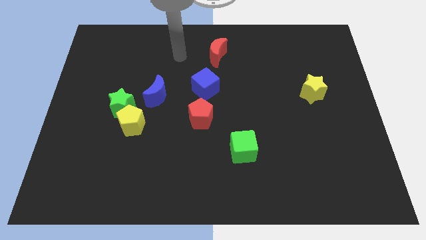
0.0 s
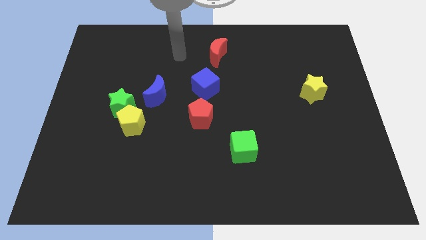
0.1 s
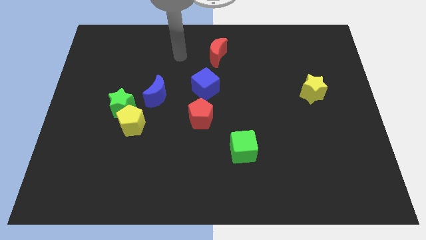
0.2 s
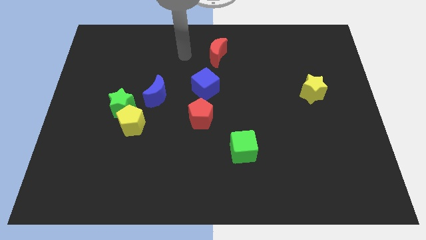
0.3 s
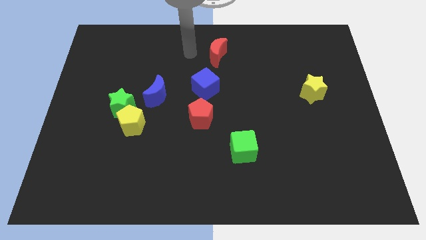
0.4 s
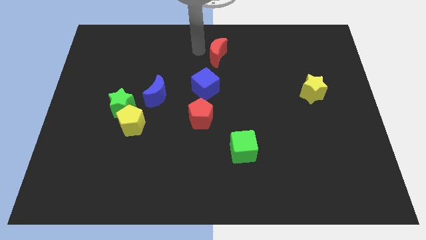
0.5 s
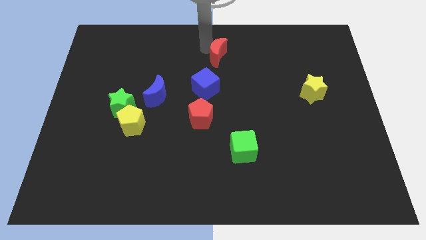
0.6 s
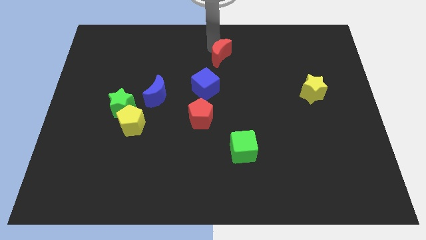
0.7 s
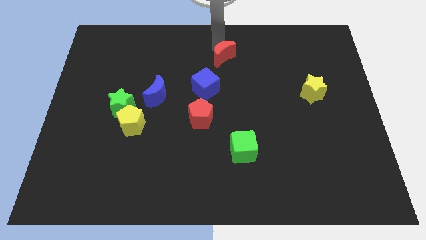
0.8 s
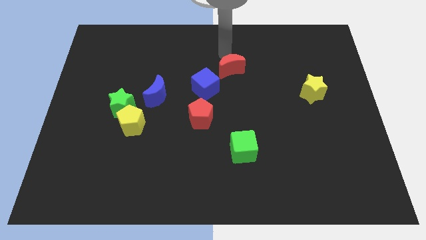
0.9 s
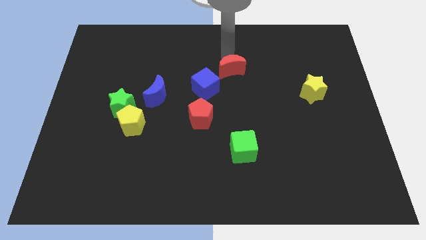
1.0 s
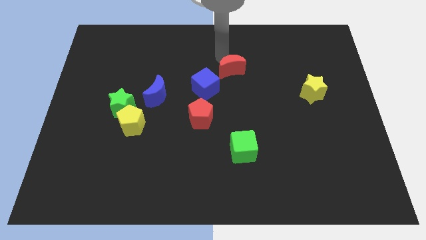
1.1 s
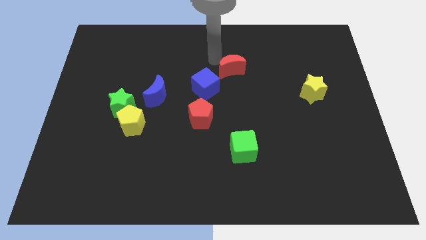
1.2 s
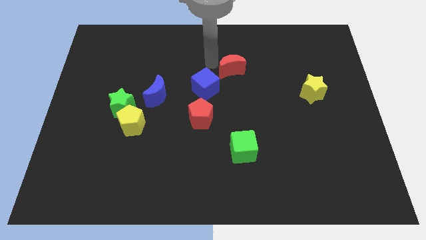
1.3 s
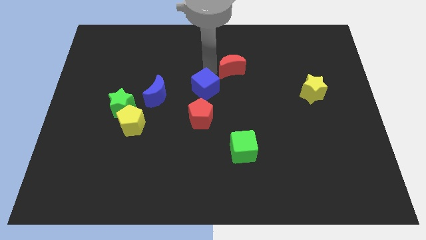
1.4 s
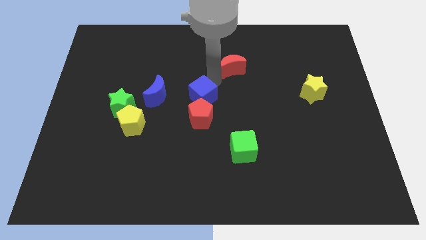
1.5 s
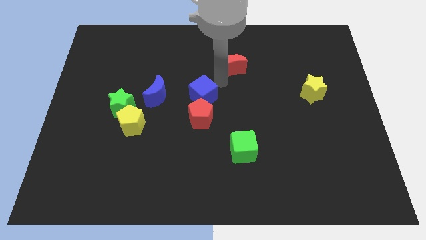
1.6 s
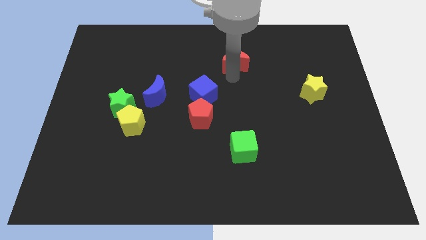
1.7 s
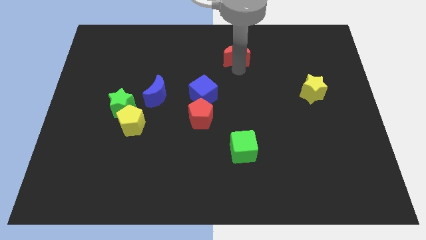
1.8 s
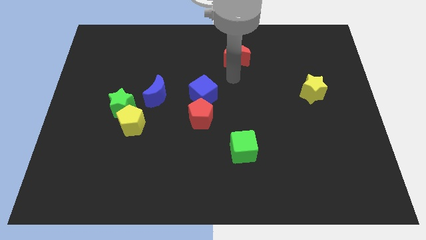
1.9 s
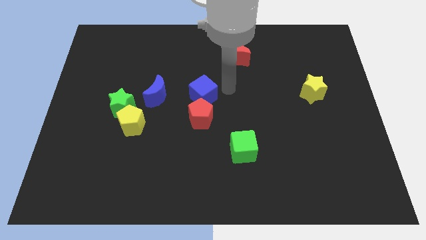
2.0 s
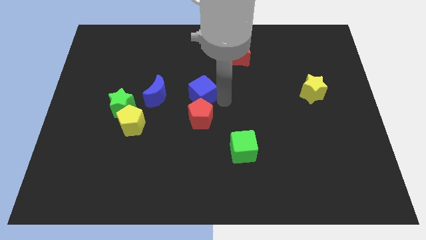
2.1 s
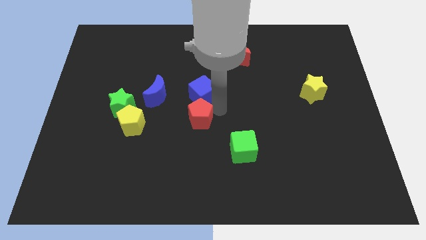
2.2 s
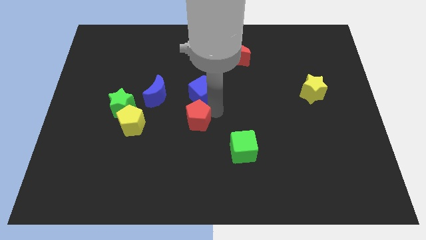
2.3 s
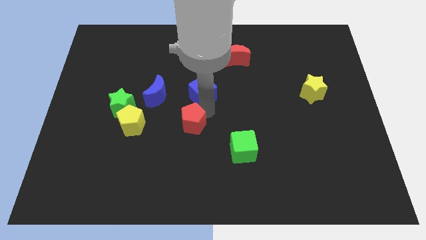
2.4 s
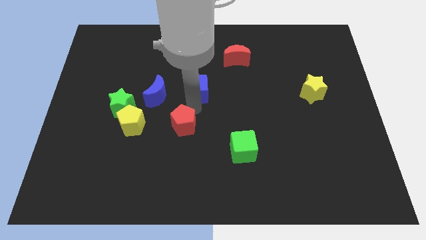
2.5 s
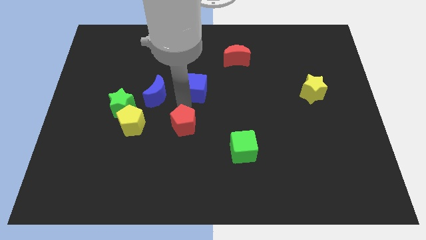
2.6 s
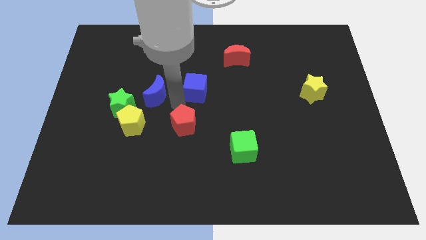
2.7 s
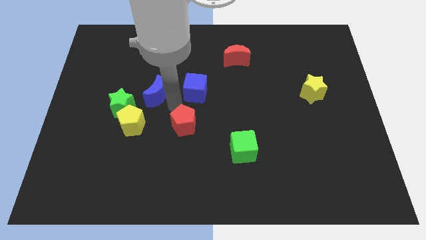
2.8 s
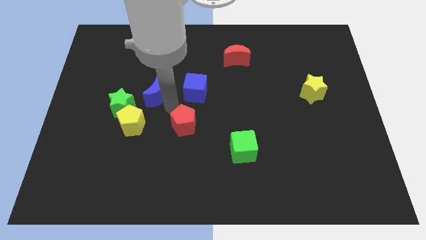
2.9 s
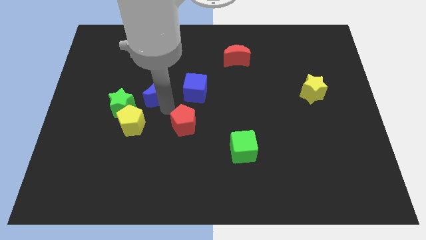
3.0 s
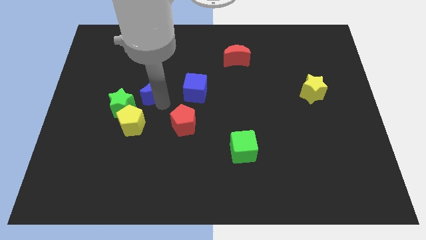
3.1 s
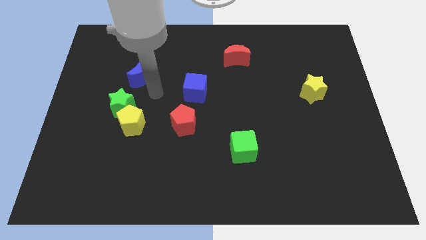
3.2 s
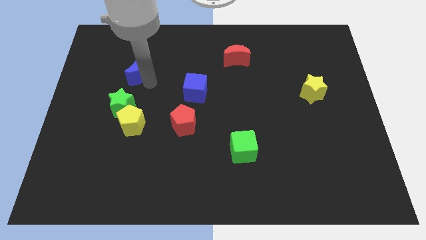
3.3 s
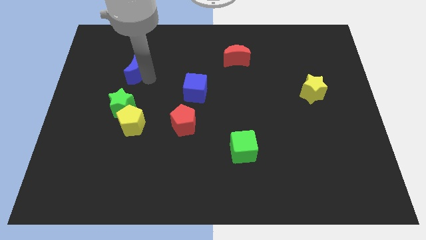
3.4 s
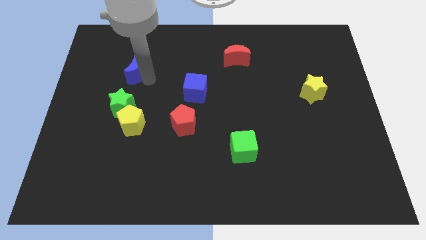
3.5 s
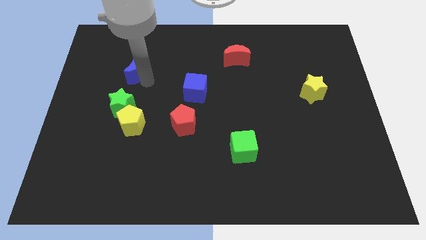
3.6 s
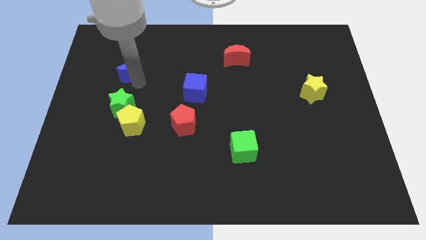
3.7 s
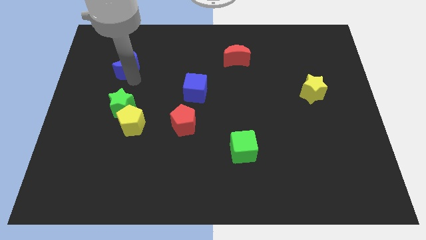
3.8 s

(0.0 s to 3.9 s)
move the blue crescent to the top of the green star

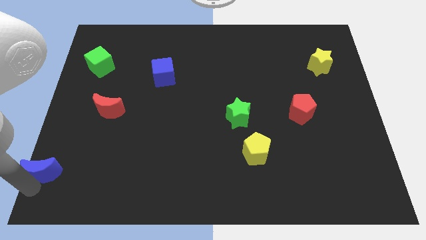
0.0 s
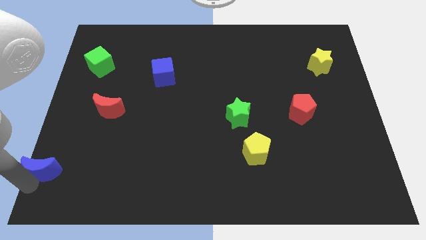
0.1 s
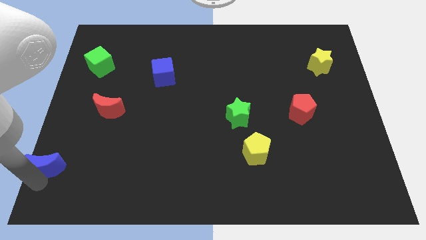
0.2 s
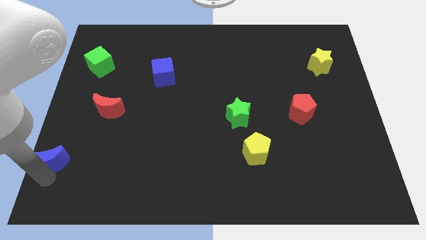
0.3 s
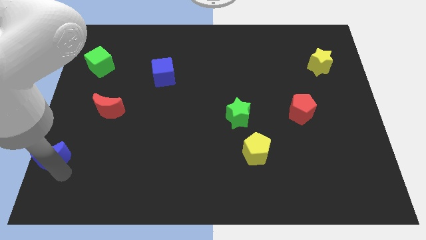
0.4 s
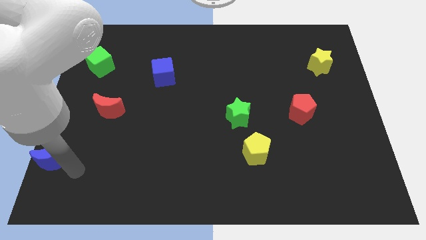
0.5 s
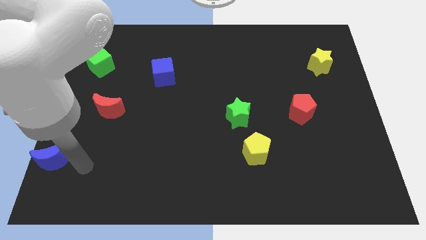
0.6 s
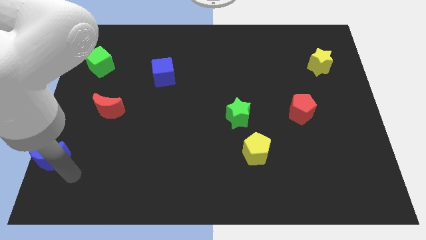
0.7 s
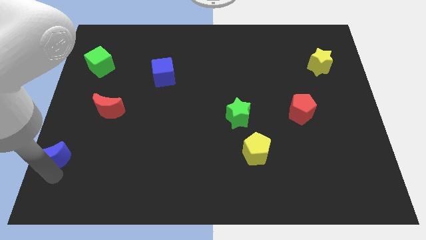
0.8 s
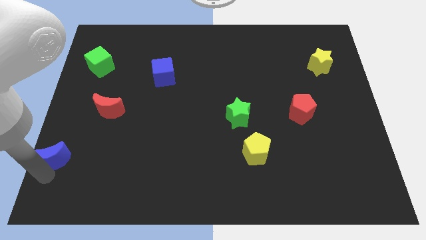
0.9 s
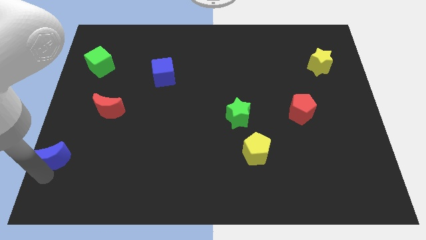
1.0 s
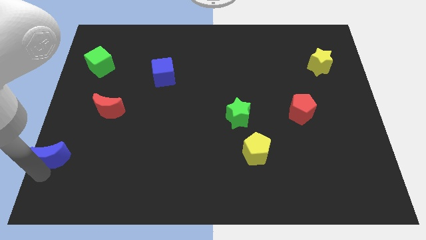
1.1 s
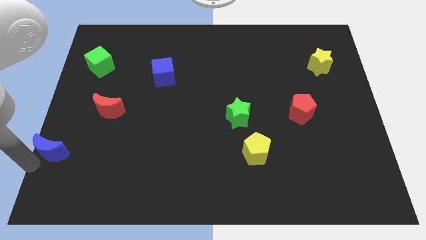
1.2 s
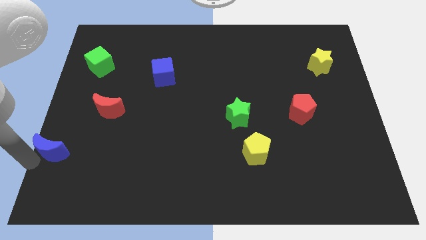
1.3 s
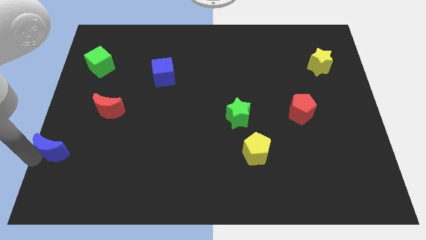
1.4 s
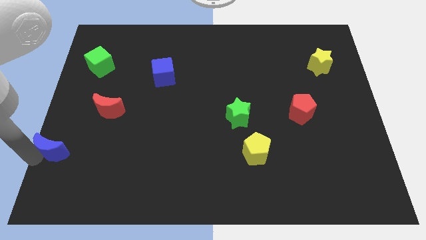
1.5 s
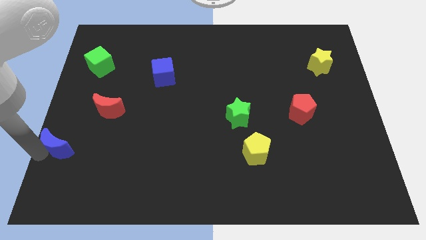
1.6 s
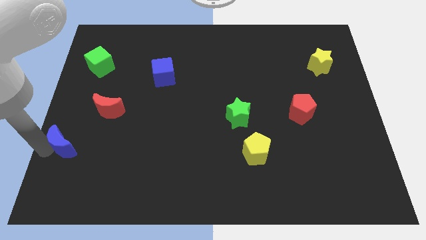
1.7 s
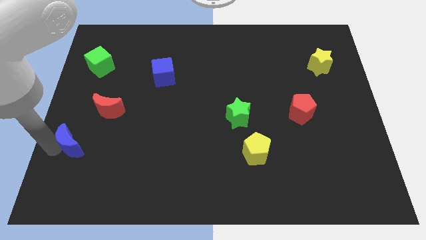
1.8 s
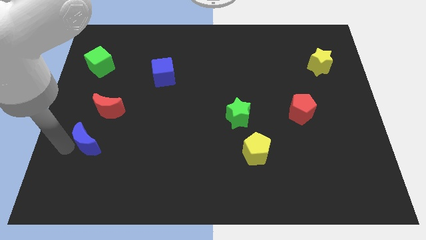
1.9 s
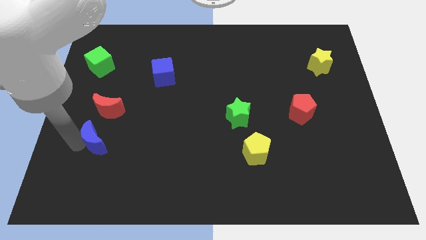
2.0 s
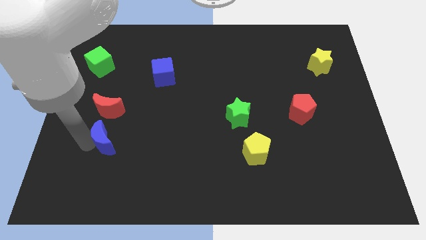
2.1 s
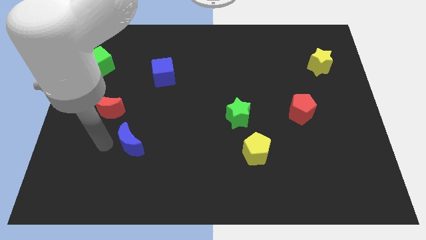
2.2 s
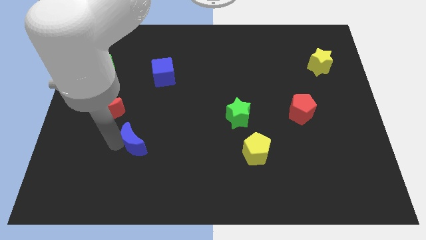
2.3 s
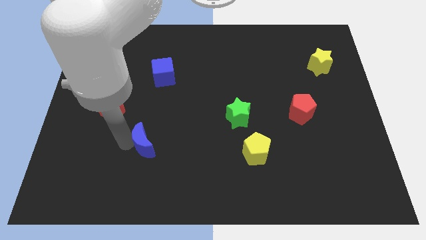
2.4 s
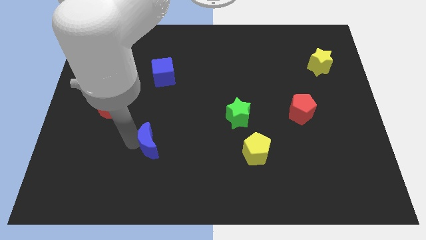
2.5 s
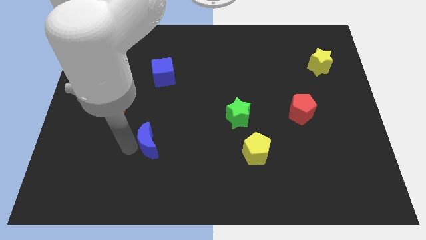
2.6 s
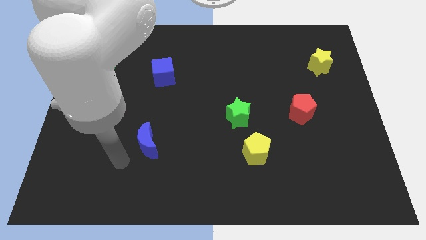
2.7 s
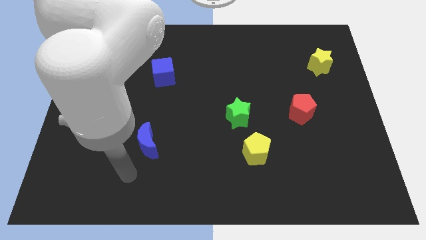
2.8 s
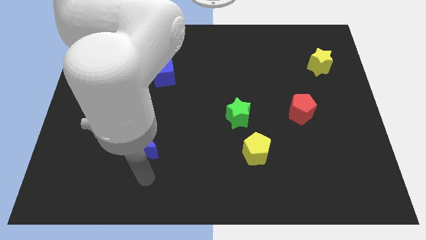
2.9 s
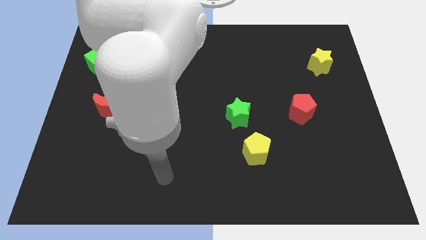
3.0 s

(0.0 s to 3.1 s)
move the blue crescent towards the center

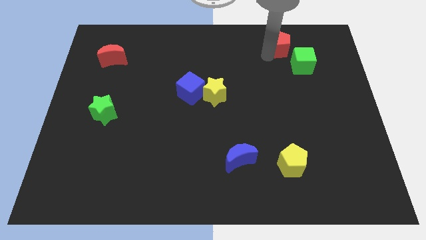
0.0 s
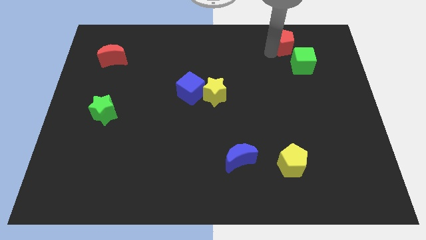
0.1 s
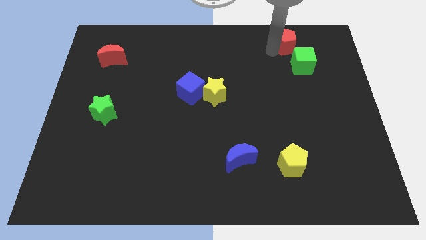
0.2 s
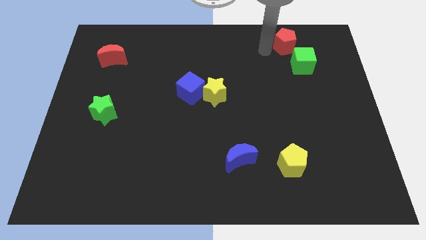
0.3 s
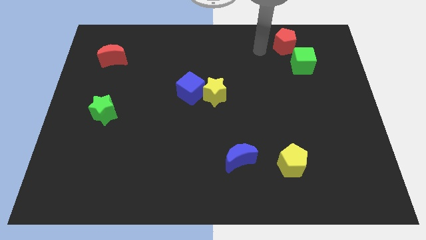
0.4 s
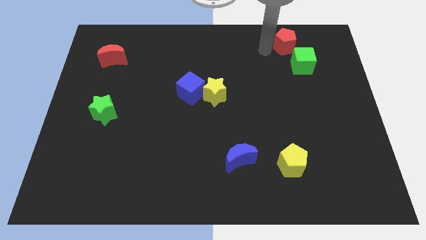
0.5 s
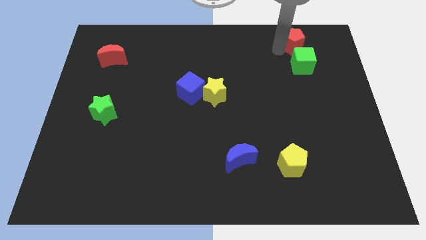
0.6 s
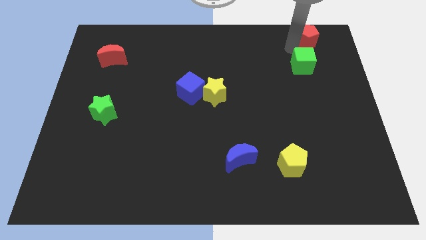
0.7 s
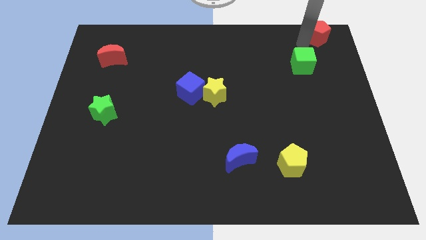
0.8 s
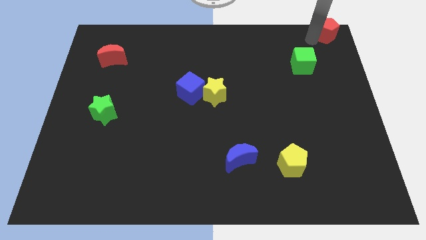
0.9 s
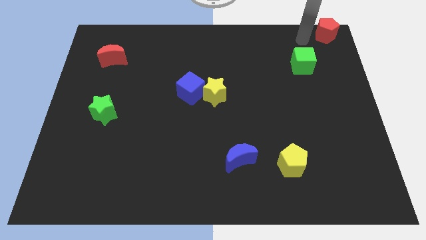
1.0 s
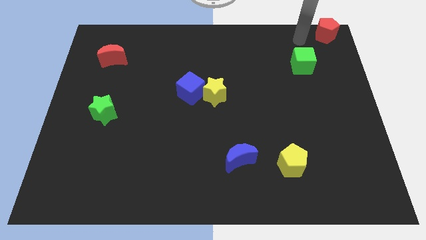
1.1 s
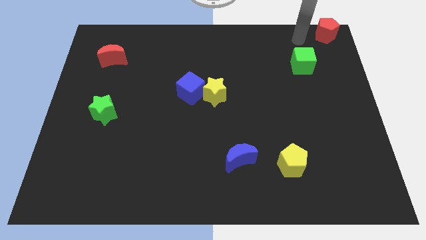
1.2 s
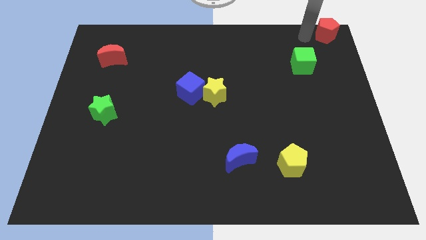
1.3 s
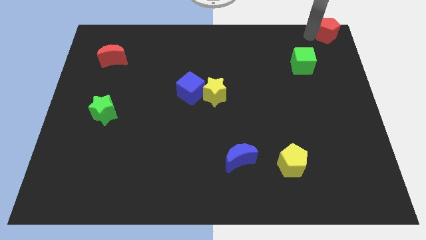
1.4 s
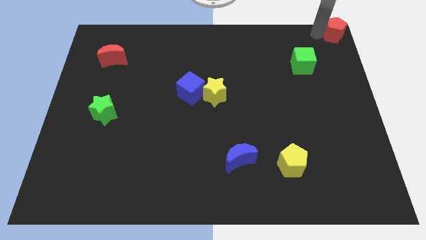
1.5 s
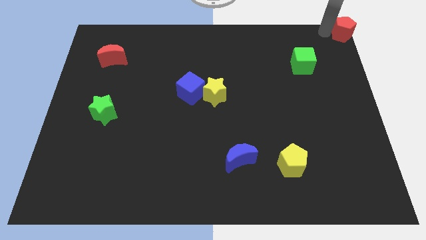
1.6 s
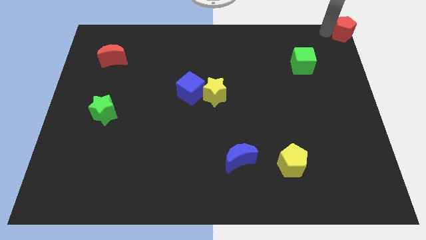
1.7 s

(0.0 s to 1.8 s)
push the red pentagon to the top right corner of the board
